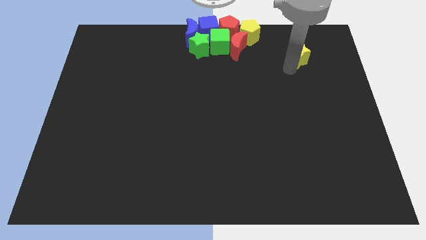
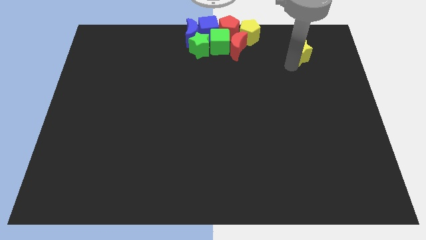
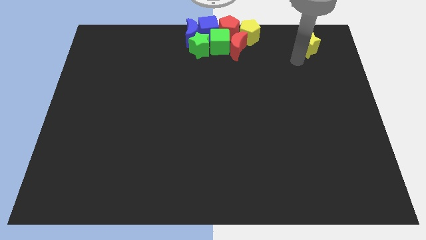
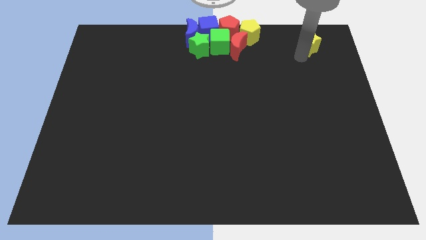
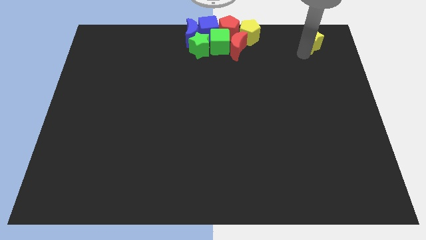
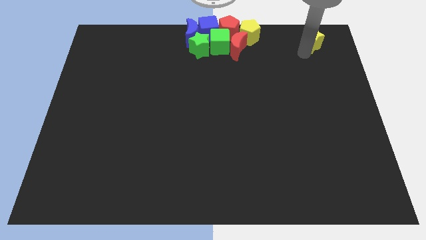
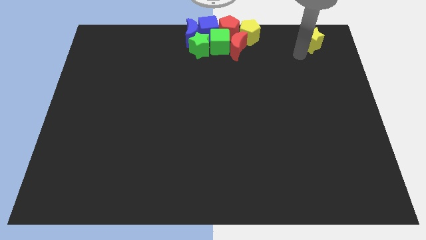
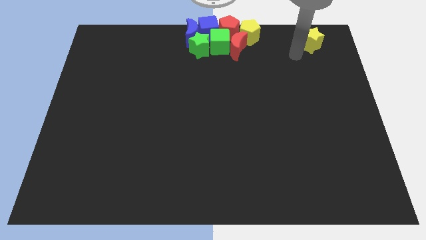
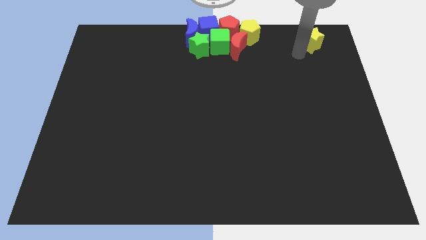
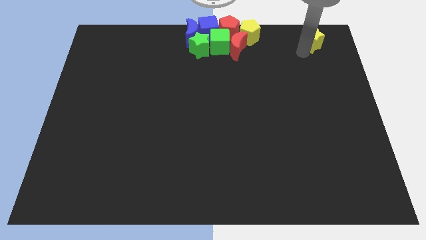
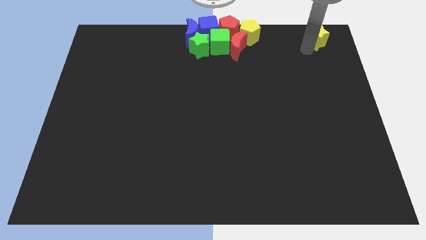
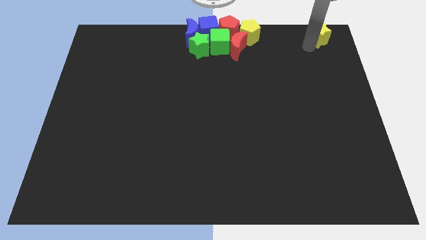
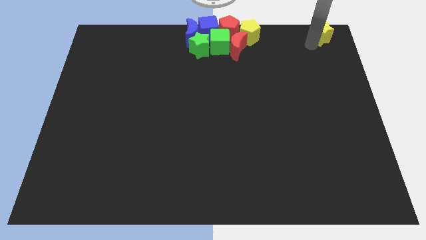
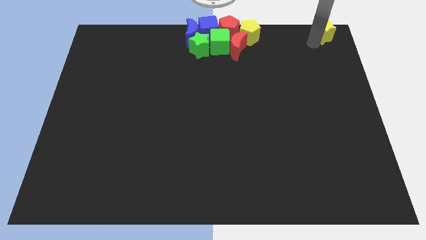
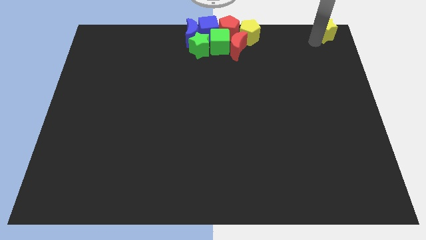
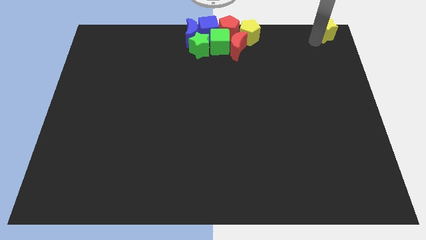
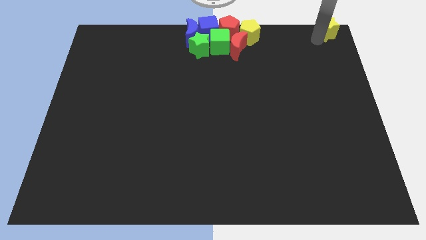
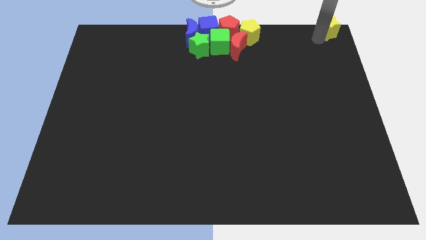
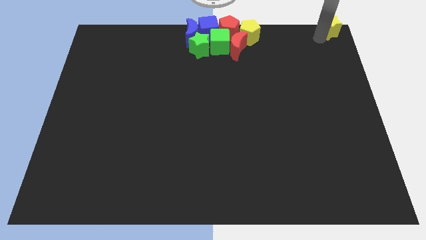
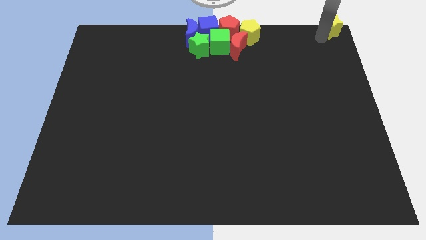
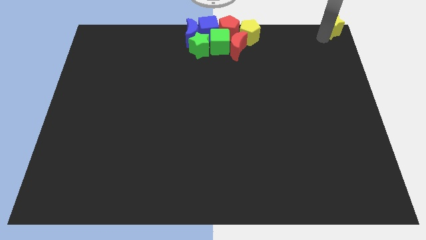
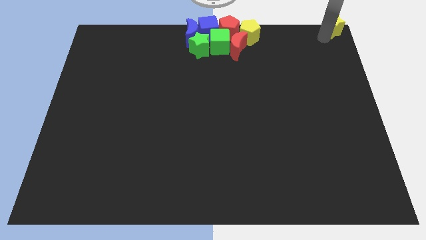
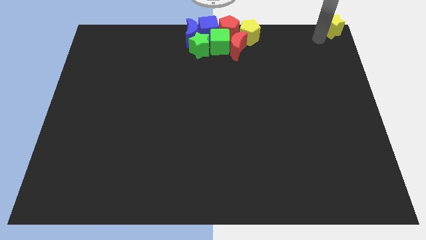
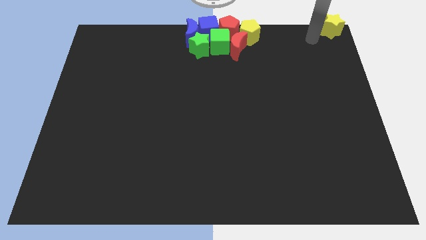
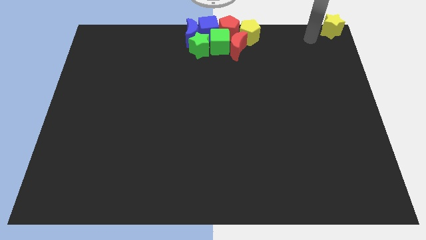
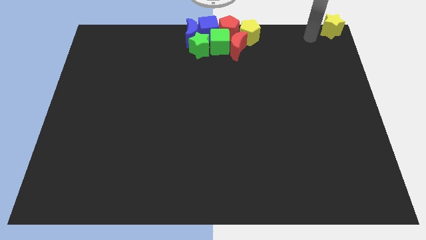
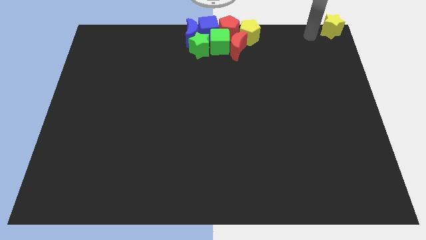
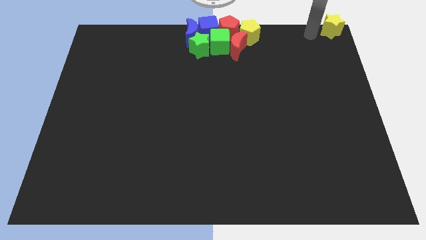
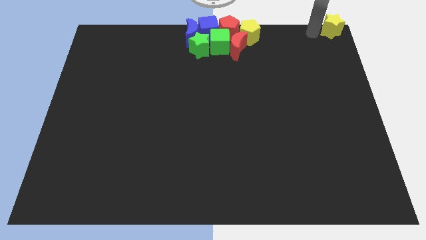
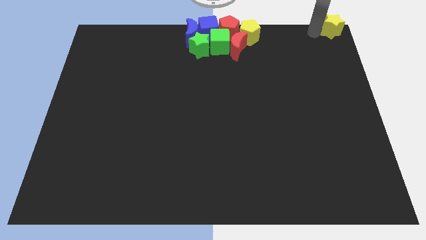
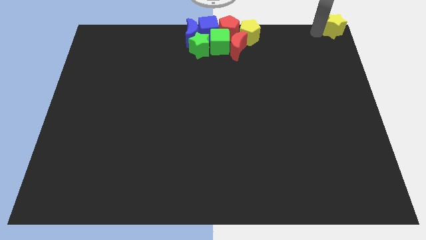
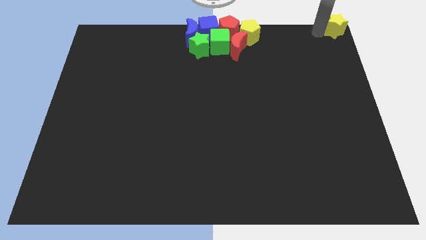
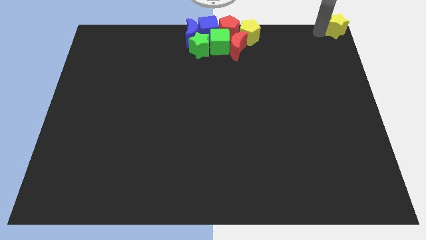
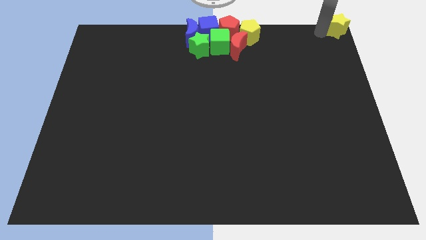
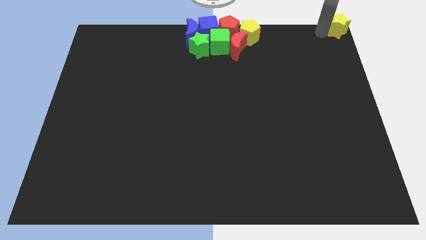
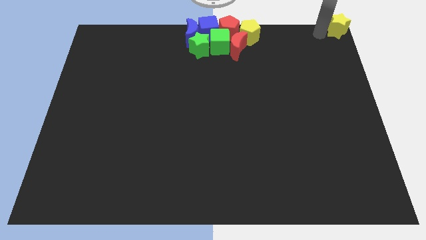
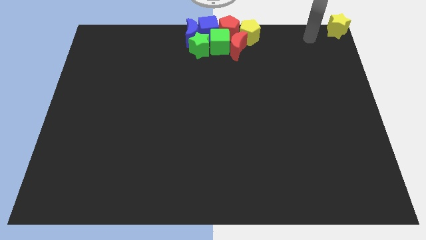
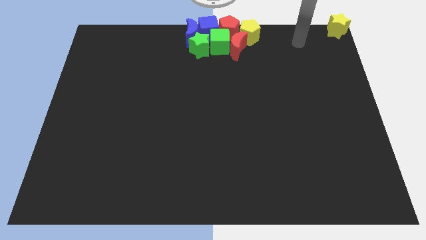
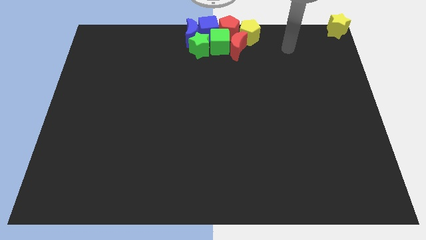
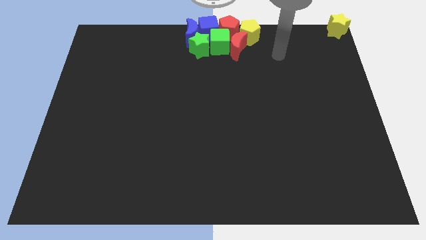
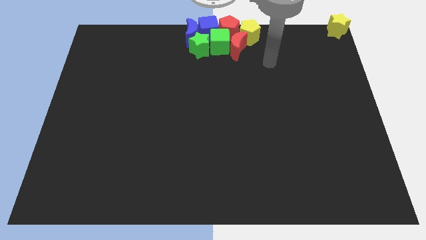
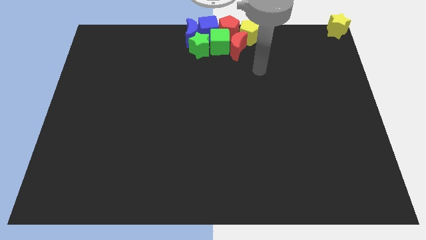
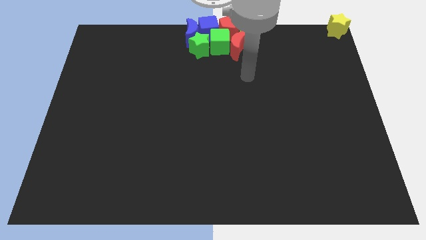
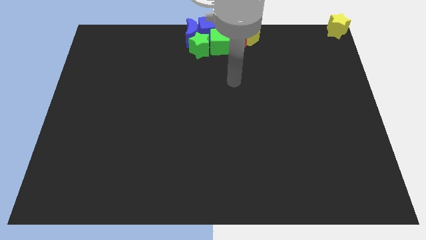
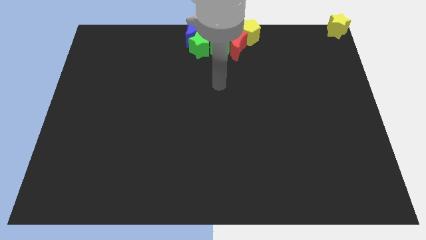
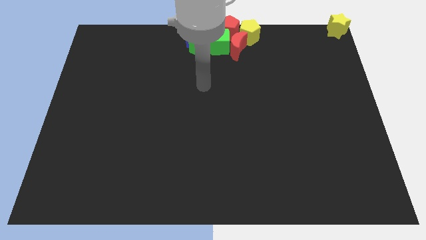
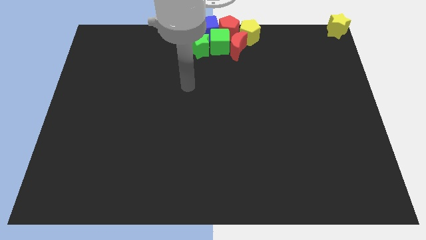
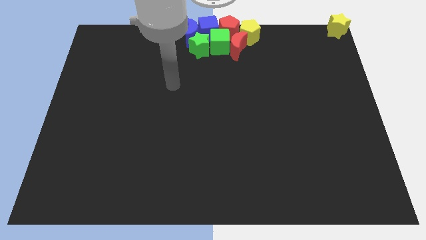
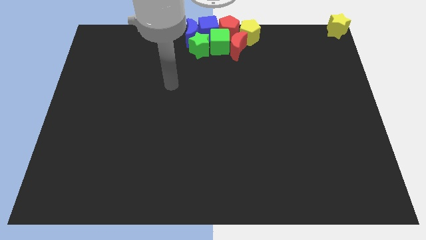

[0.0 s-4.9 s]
slide the yellow star to the top right corner of the board

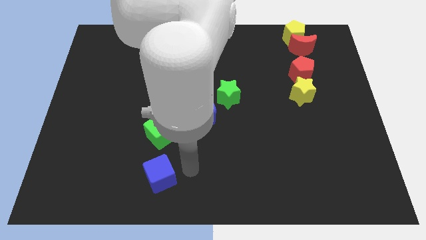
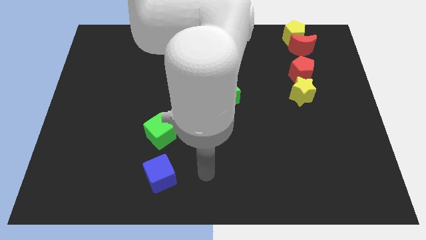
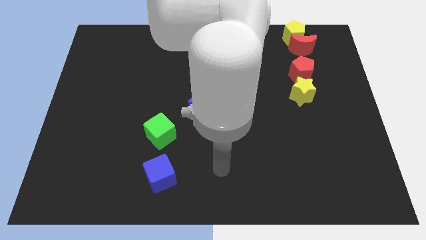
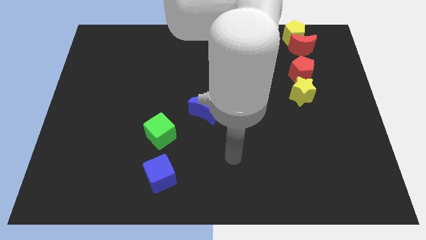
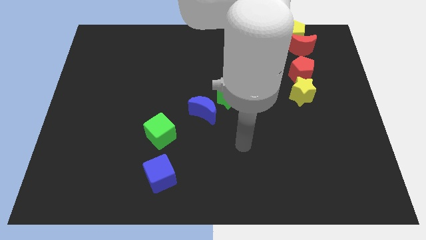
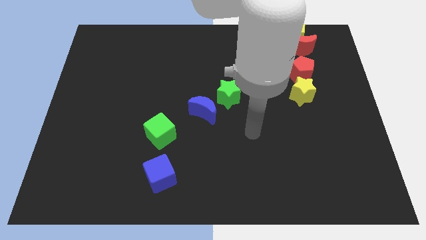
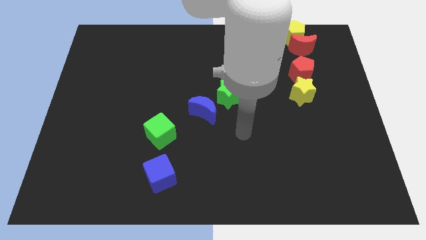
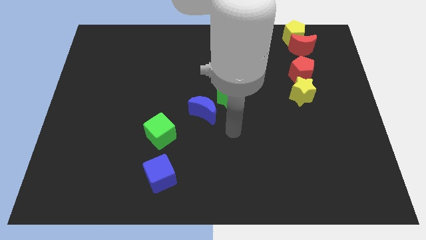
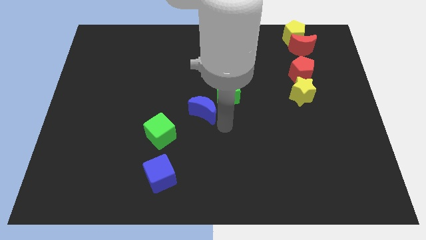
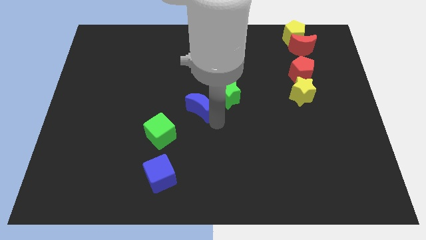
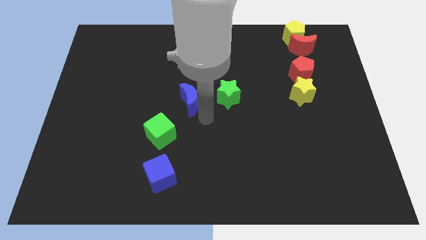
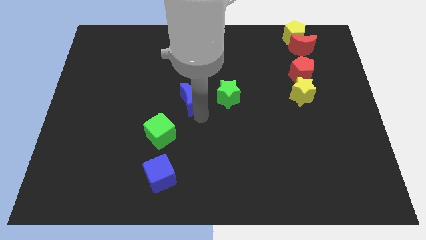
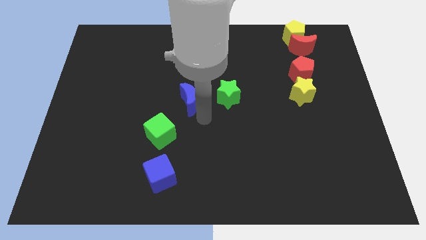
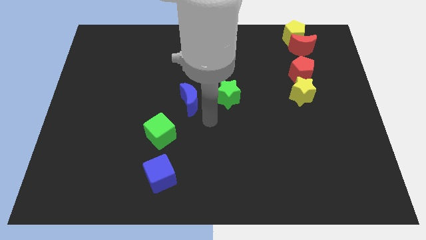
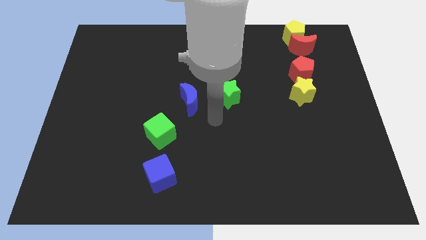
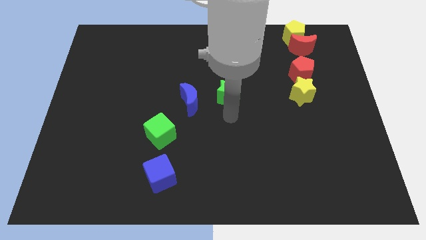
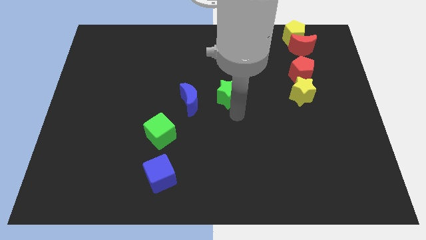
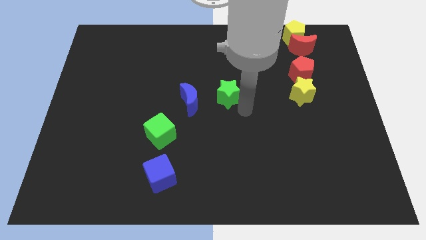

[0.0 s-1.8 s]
push the blue crescent towards the left side of the green star

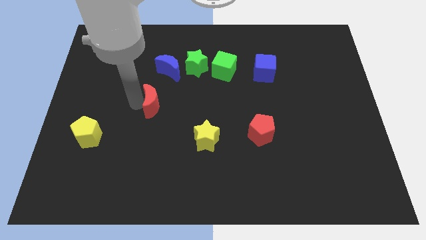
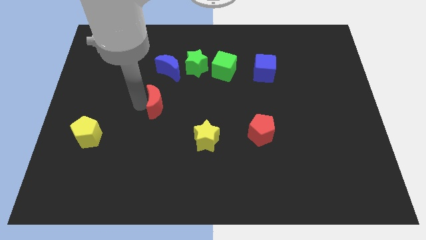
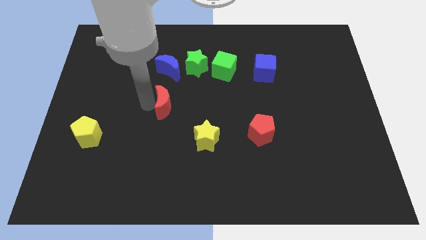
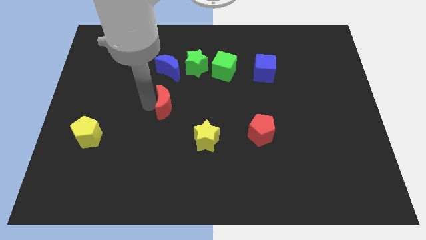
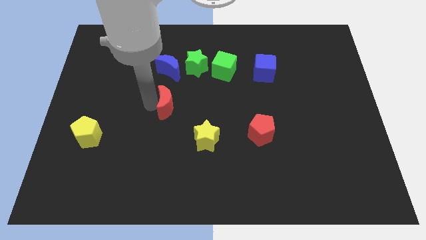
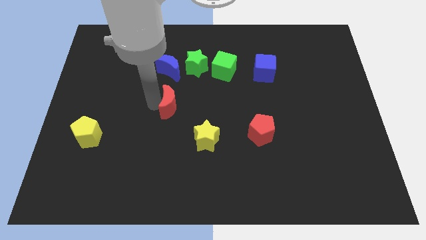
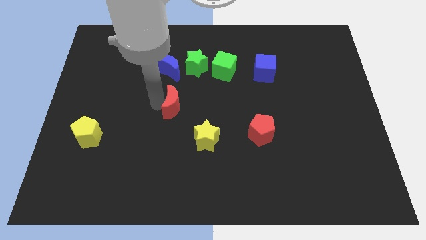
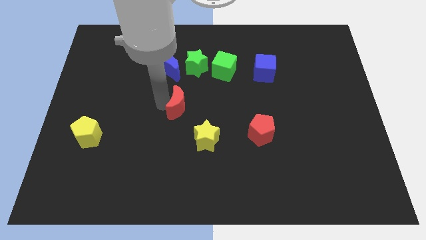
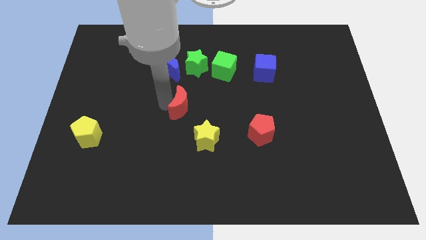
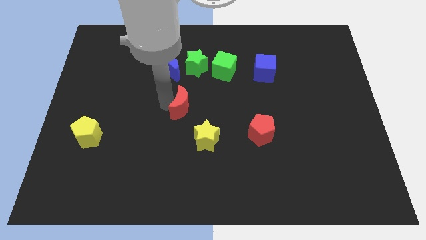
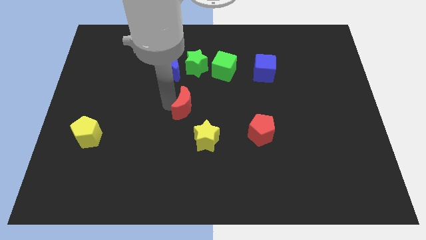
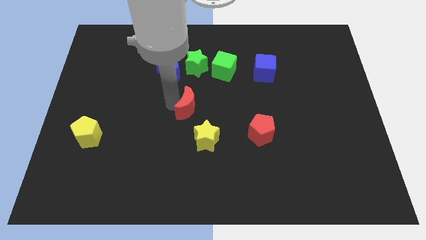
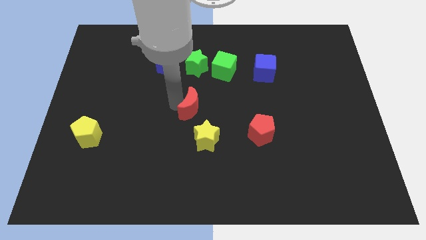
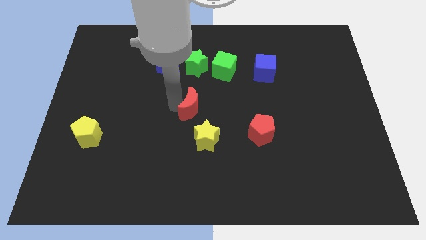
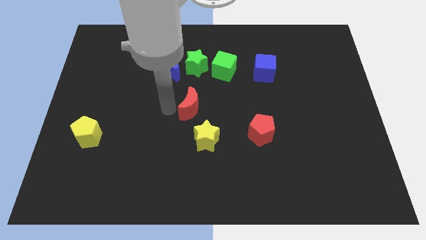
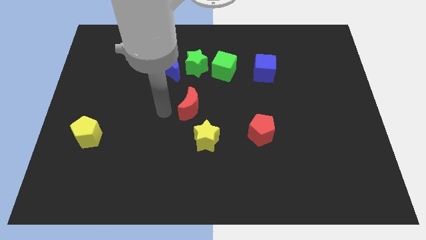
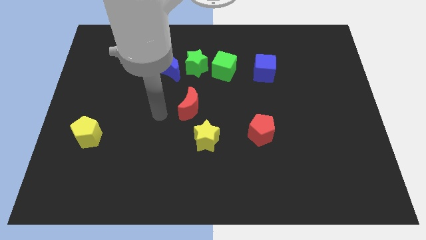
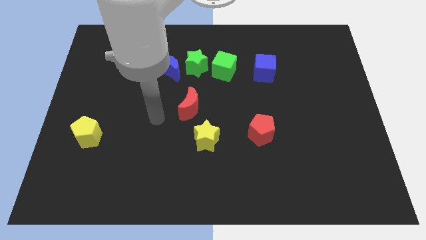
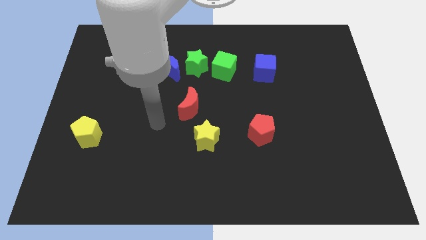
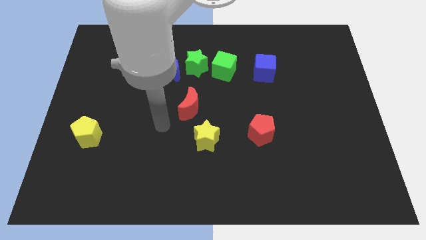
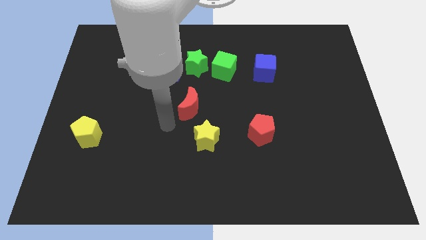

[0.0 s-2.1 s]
push the red moon to the center

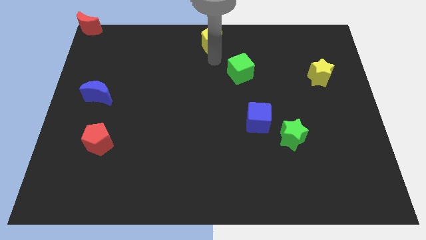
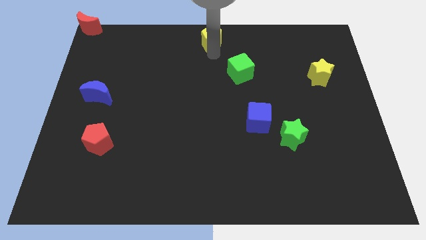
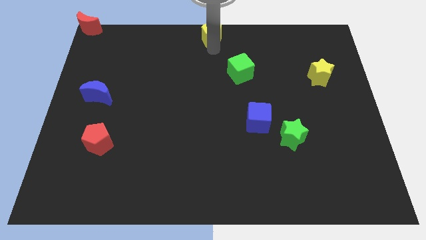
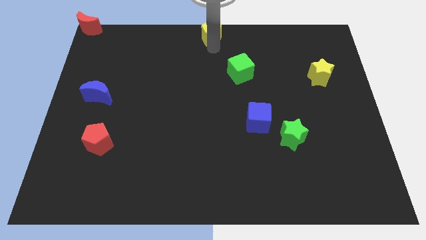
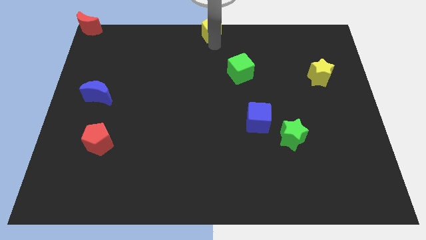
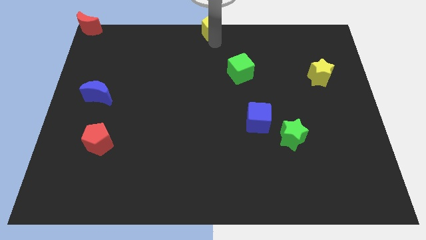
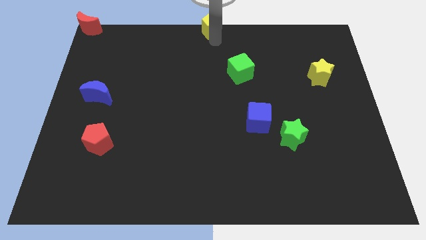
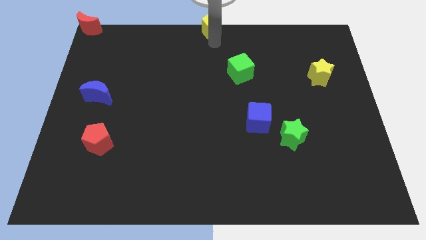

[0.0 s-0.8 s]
push the yellow pentagon to the top center of the board
